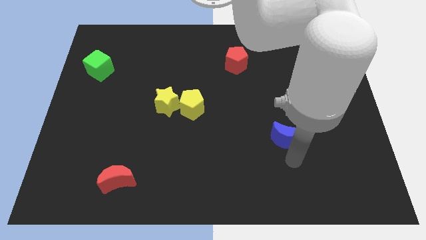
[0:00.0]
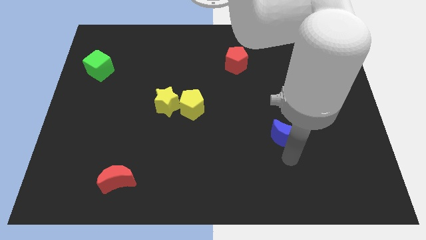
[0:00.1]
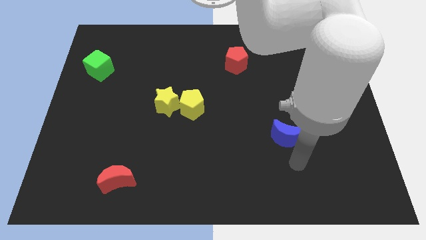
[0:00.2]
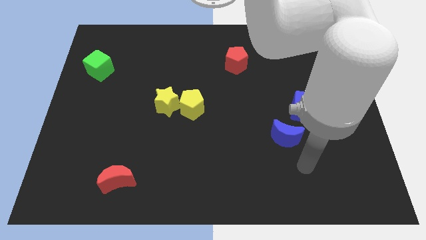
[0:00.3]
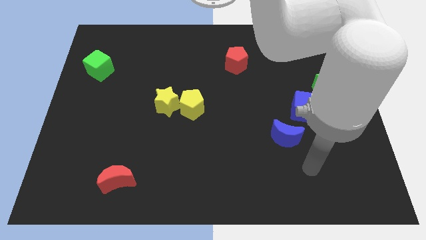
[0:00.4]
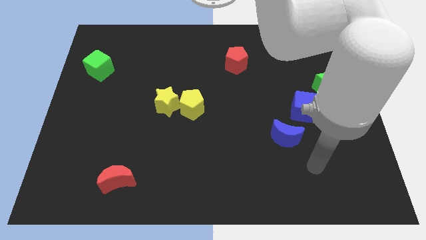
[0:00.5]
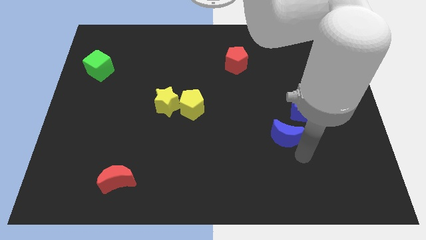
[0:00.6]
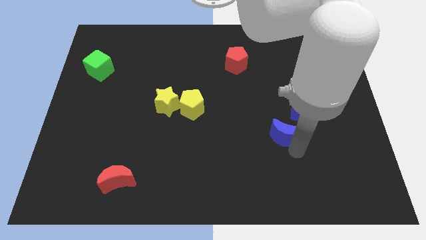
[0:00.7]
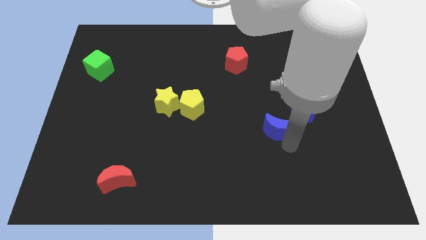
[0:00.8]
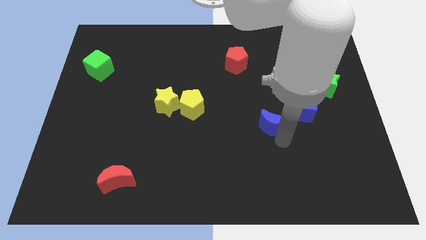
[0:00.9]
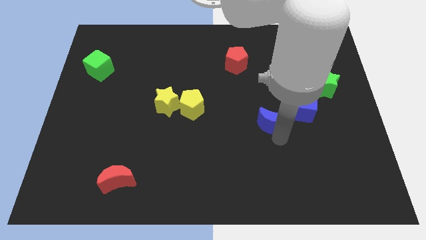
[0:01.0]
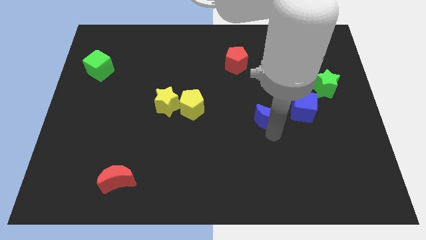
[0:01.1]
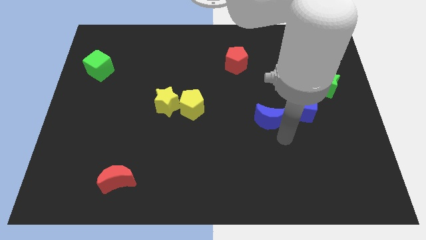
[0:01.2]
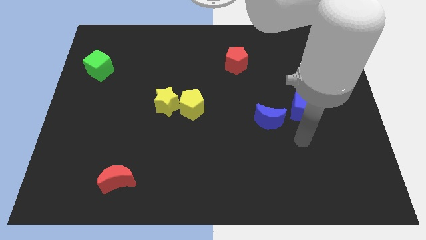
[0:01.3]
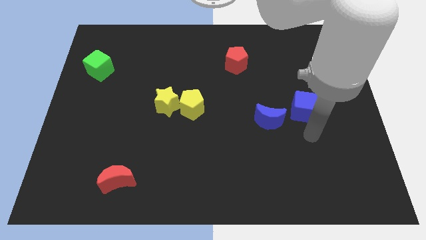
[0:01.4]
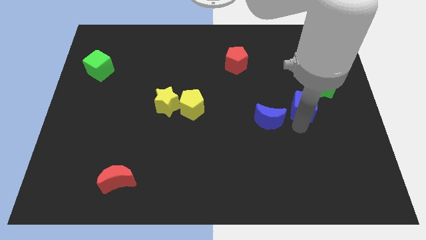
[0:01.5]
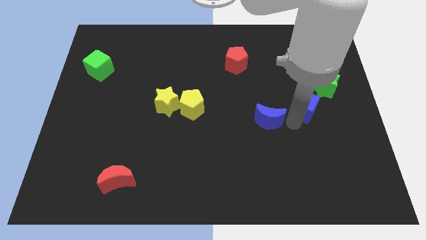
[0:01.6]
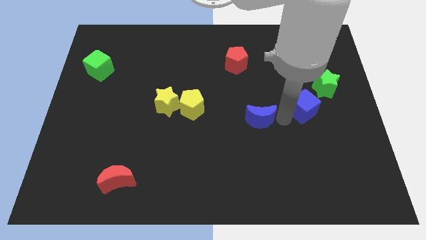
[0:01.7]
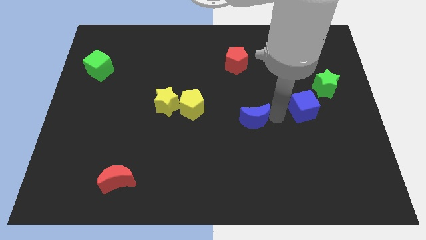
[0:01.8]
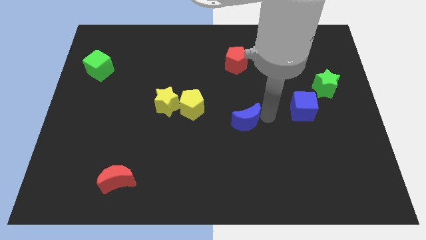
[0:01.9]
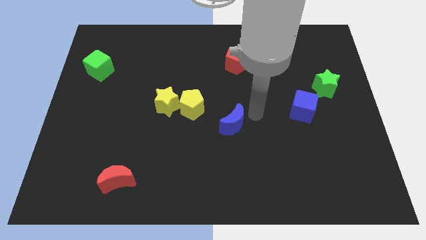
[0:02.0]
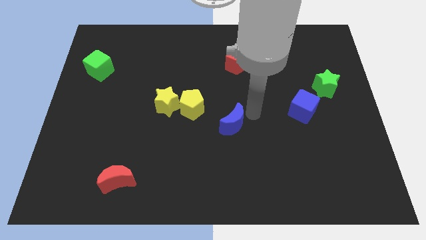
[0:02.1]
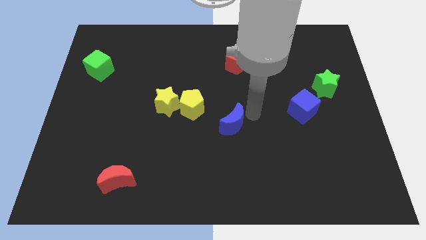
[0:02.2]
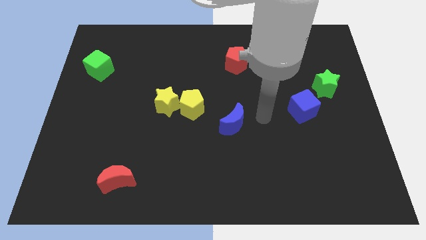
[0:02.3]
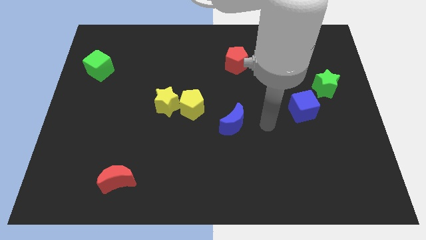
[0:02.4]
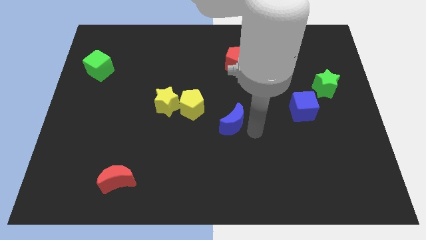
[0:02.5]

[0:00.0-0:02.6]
move the blue crescent to the center of the board

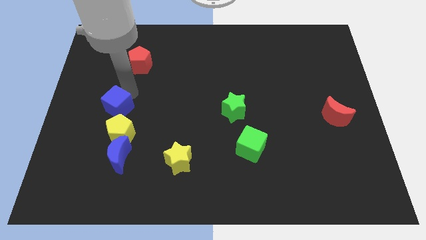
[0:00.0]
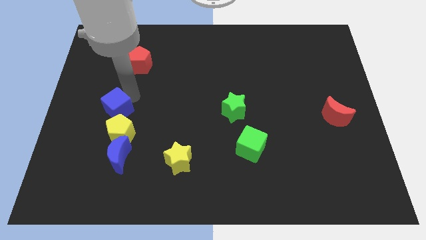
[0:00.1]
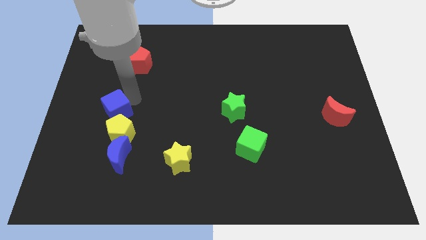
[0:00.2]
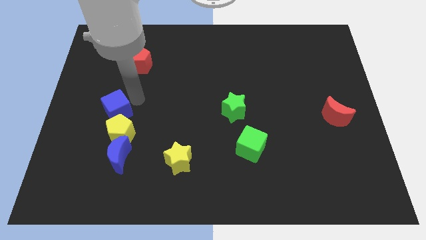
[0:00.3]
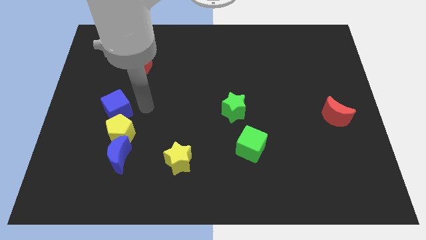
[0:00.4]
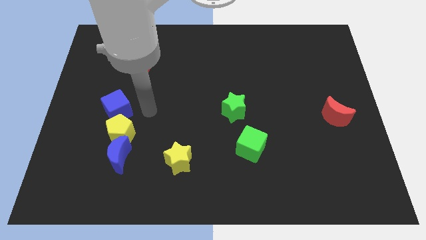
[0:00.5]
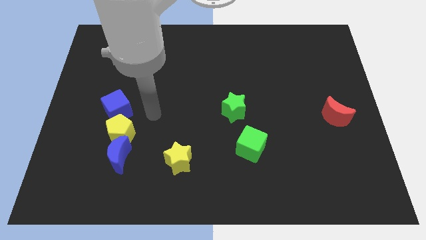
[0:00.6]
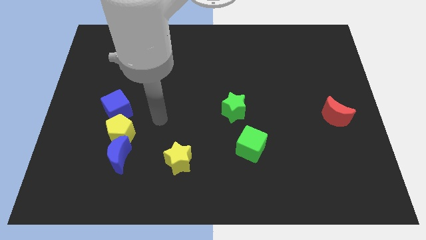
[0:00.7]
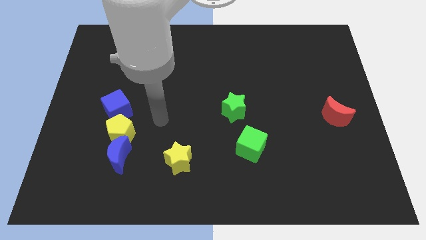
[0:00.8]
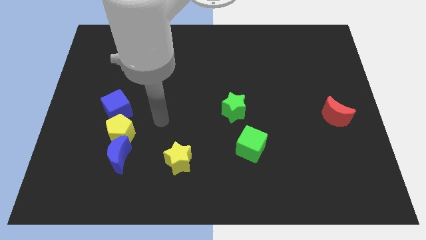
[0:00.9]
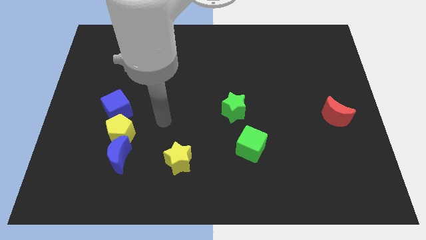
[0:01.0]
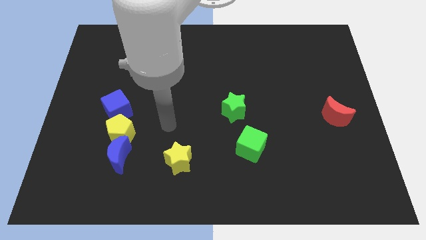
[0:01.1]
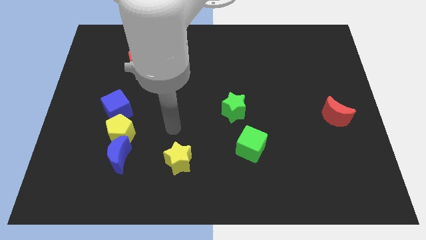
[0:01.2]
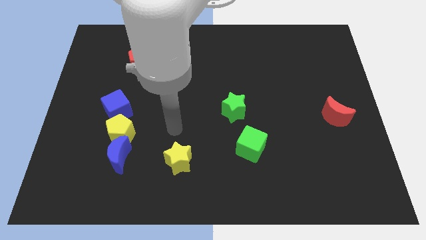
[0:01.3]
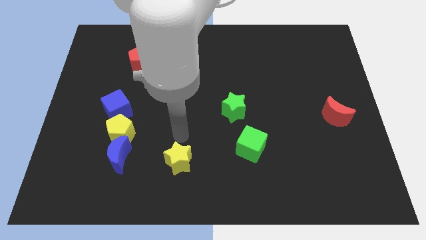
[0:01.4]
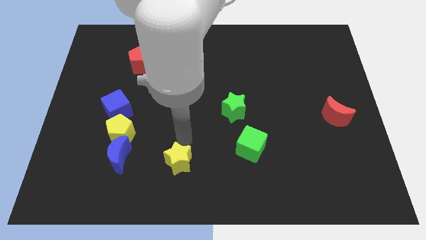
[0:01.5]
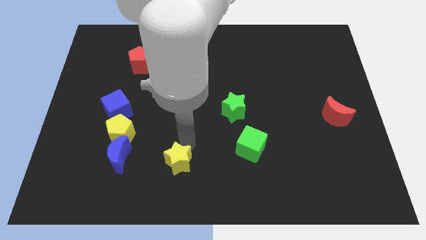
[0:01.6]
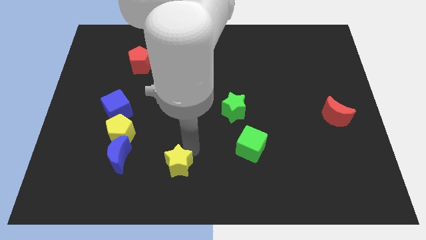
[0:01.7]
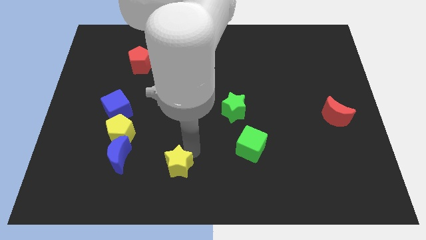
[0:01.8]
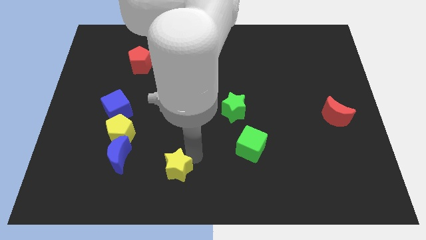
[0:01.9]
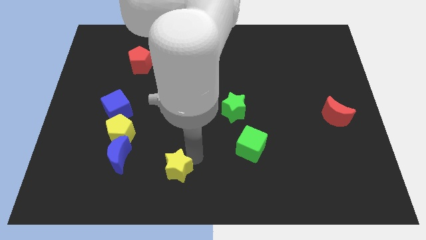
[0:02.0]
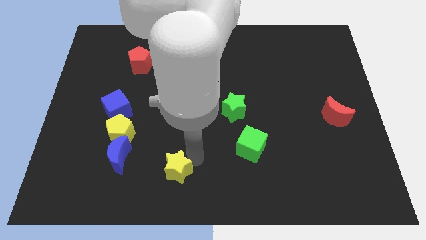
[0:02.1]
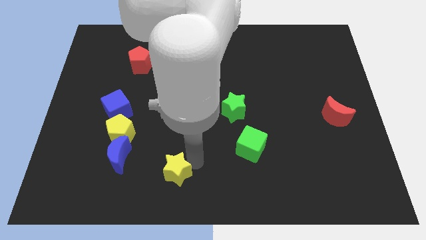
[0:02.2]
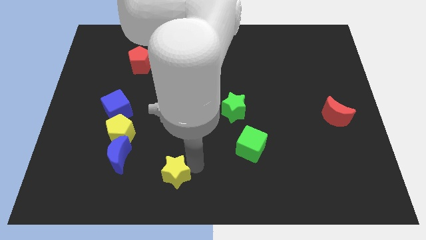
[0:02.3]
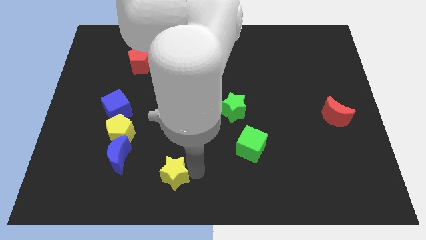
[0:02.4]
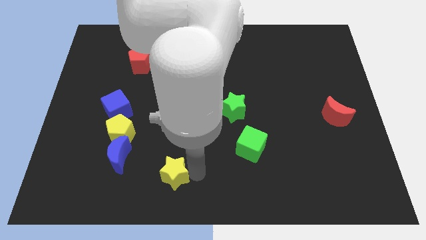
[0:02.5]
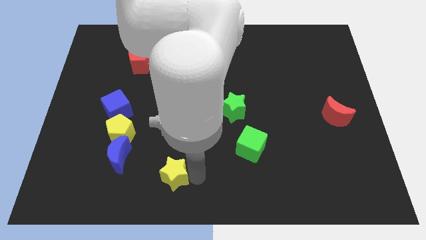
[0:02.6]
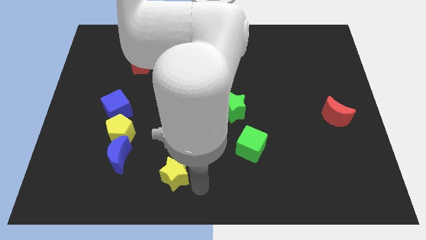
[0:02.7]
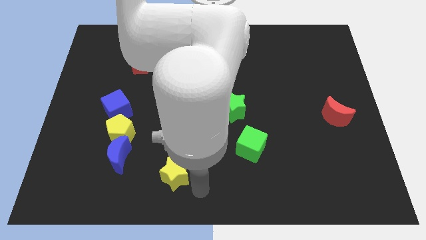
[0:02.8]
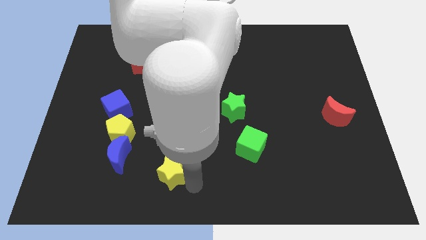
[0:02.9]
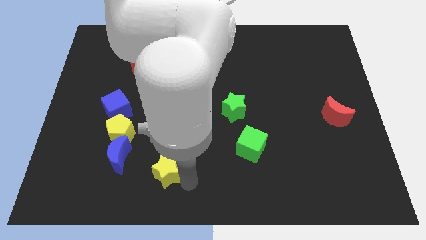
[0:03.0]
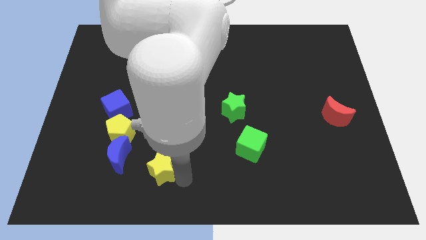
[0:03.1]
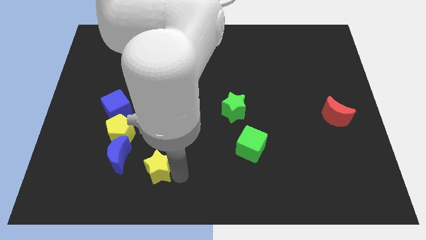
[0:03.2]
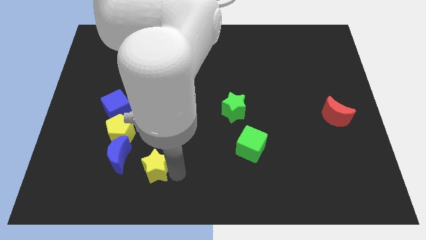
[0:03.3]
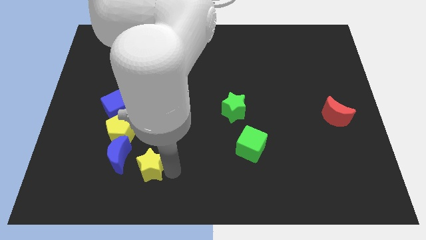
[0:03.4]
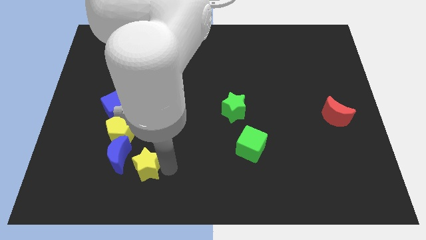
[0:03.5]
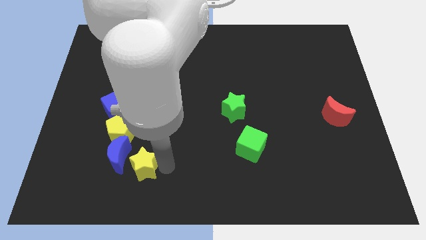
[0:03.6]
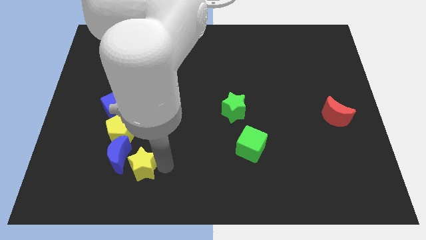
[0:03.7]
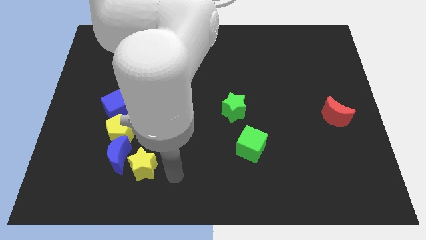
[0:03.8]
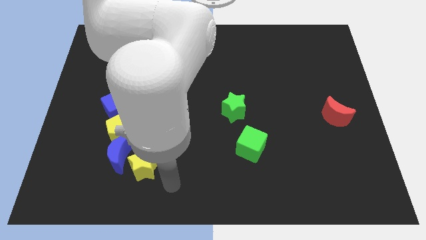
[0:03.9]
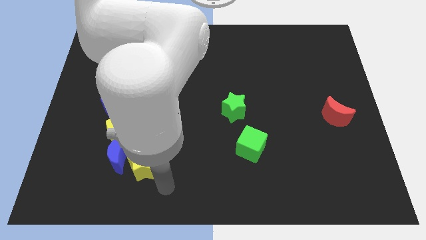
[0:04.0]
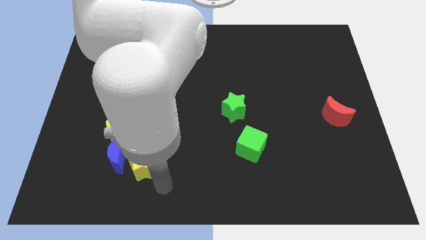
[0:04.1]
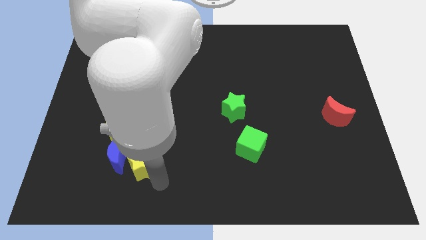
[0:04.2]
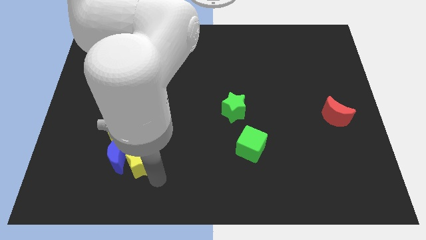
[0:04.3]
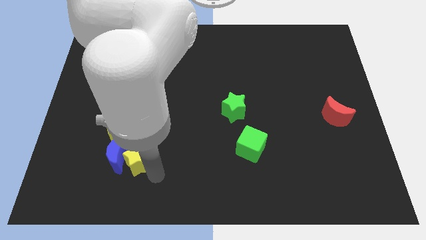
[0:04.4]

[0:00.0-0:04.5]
place the yellow star bbeside the blue moon

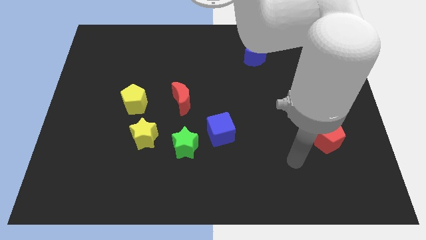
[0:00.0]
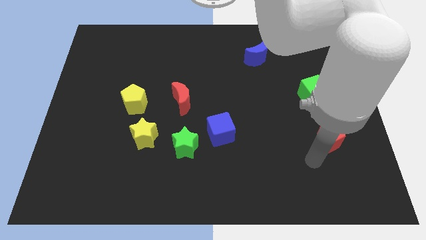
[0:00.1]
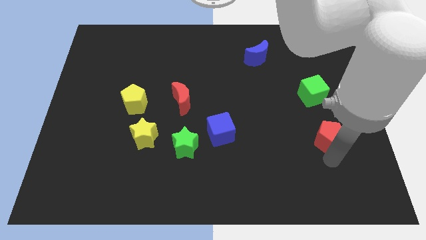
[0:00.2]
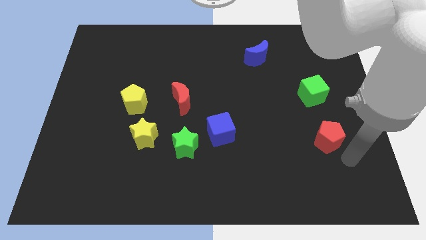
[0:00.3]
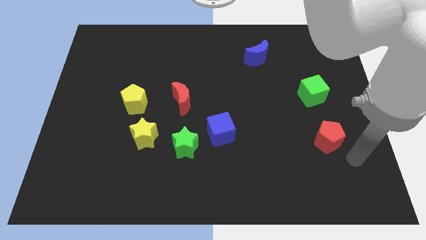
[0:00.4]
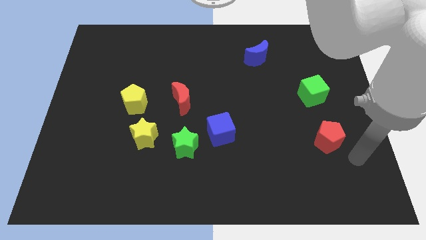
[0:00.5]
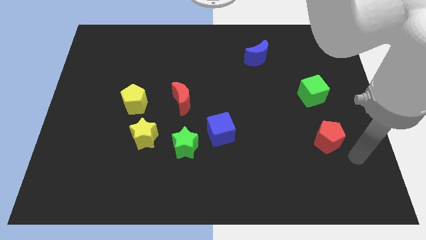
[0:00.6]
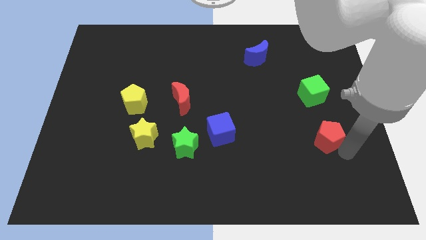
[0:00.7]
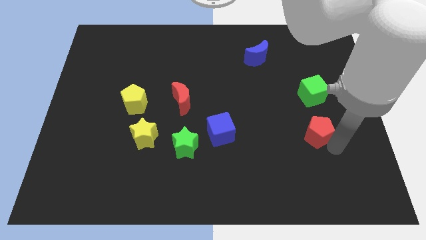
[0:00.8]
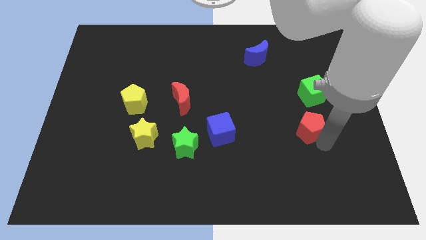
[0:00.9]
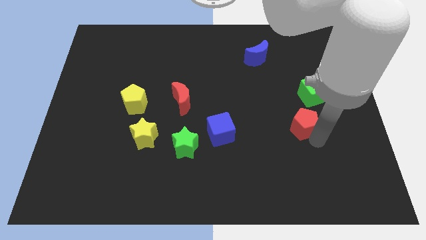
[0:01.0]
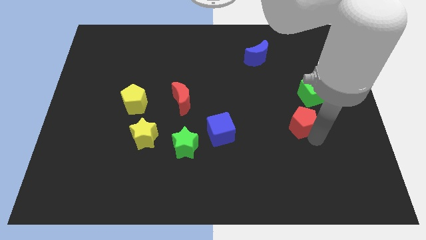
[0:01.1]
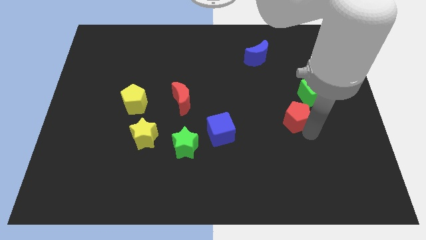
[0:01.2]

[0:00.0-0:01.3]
place the red pentagon diagonal to the green cube

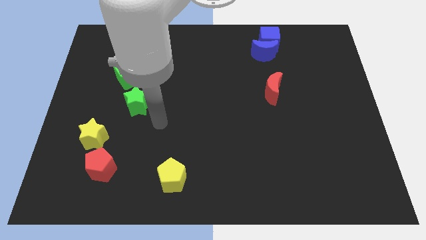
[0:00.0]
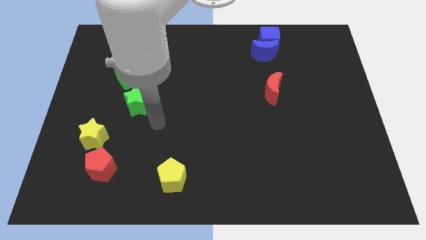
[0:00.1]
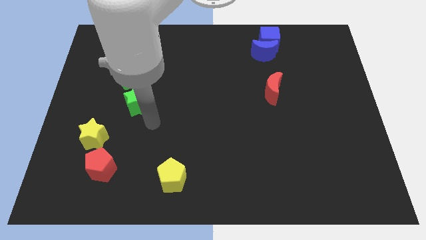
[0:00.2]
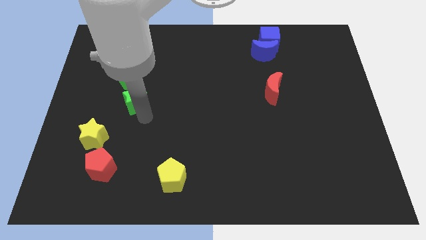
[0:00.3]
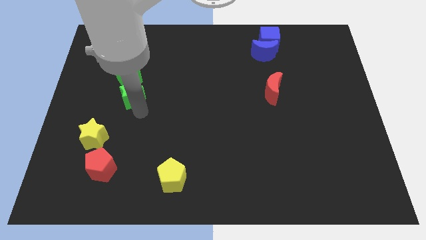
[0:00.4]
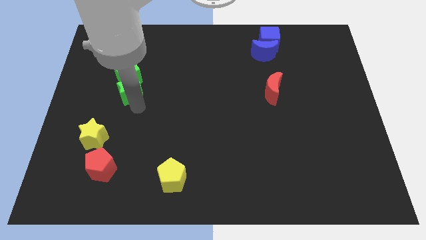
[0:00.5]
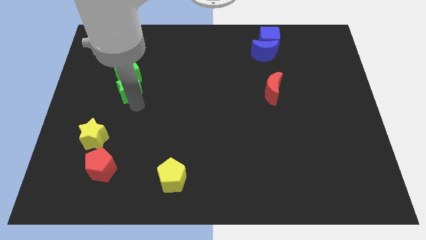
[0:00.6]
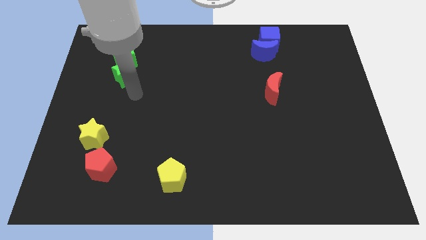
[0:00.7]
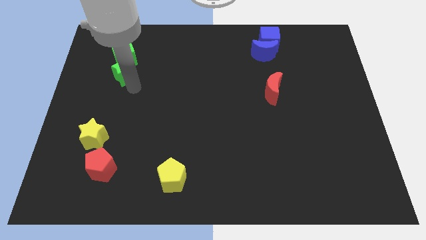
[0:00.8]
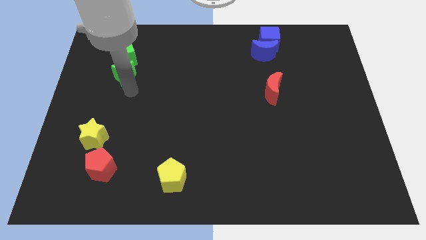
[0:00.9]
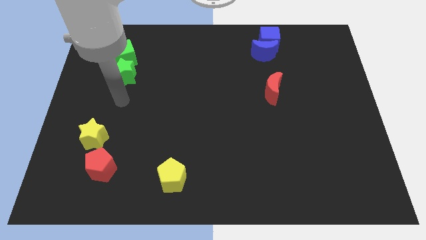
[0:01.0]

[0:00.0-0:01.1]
push the green star into the green cube
